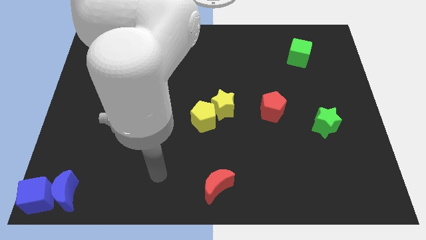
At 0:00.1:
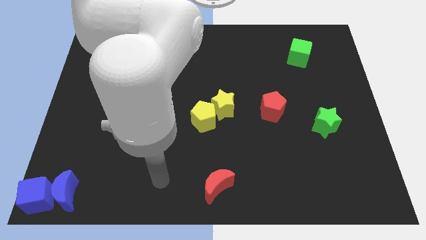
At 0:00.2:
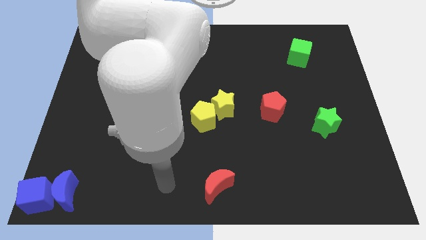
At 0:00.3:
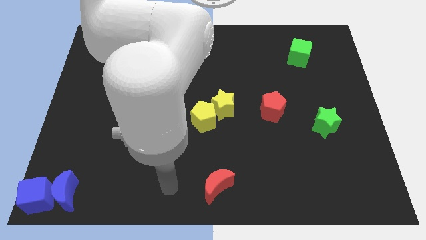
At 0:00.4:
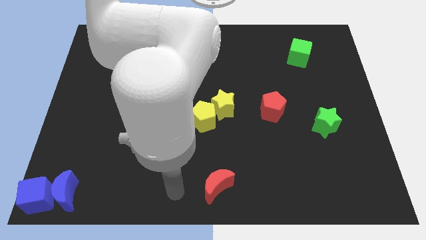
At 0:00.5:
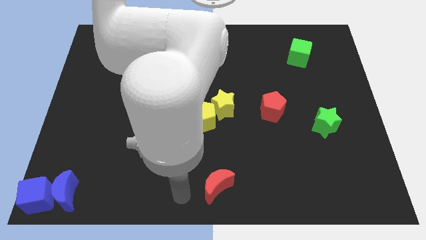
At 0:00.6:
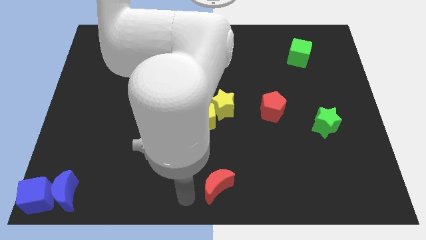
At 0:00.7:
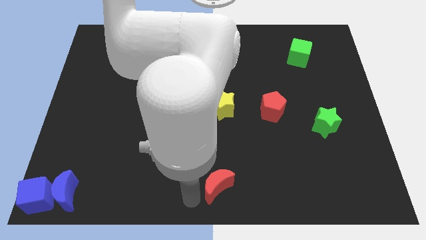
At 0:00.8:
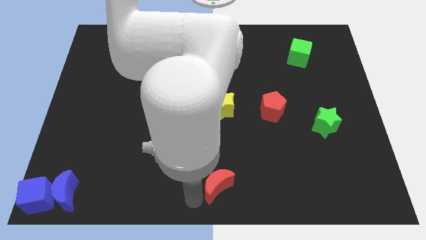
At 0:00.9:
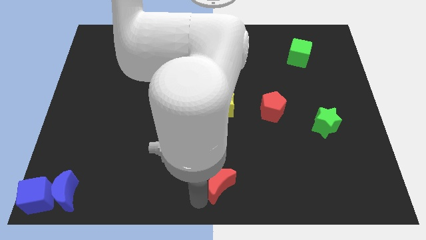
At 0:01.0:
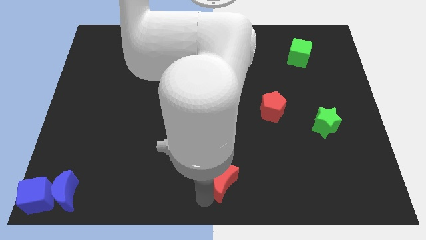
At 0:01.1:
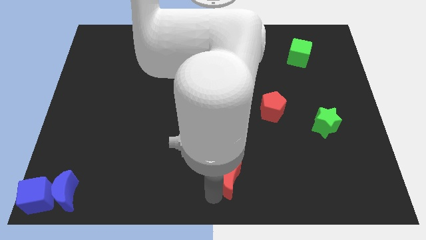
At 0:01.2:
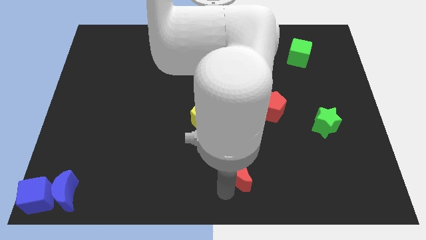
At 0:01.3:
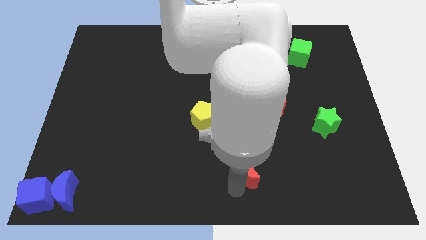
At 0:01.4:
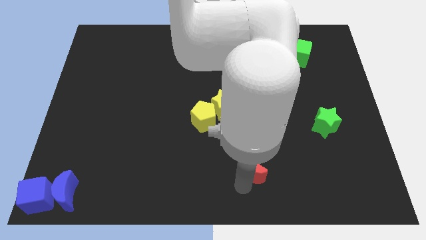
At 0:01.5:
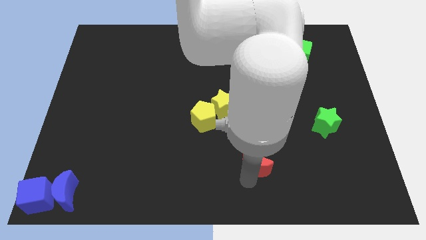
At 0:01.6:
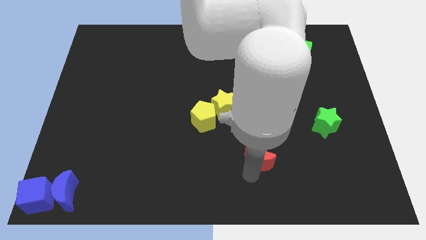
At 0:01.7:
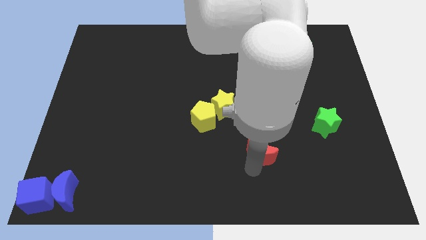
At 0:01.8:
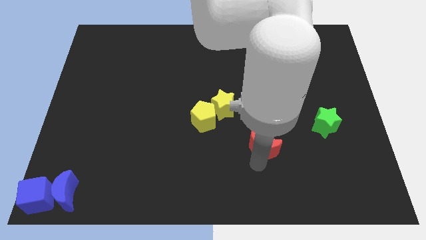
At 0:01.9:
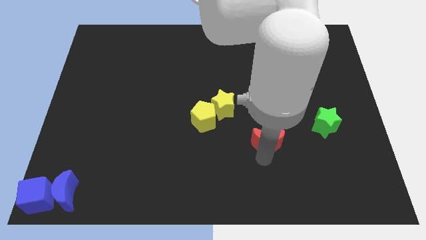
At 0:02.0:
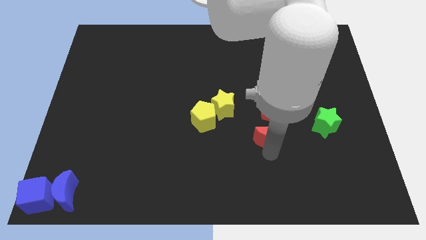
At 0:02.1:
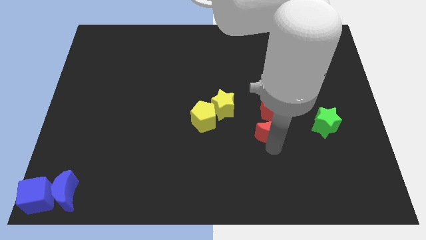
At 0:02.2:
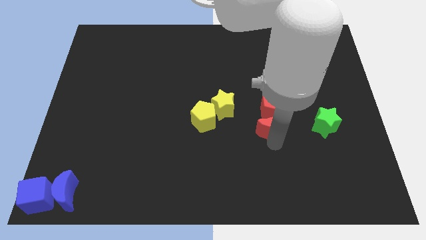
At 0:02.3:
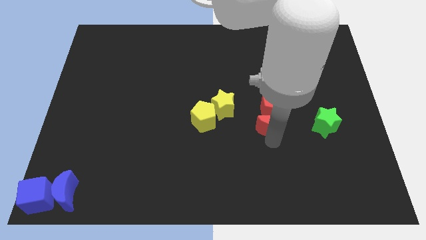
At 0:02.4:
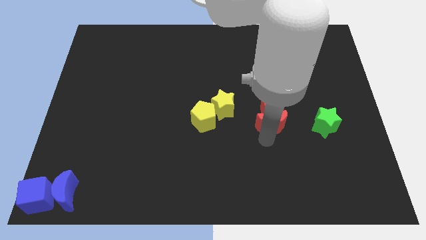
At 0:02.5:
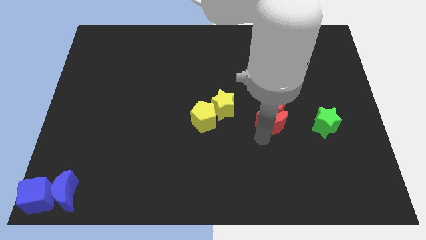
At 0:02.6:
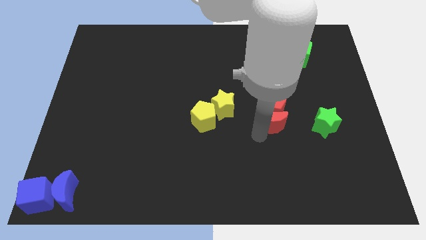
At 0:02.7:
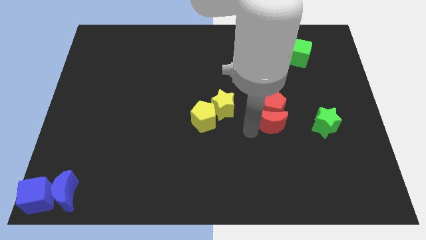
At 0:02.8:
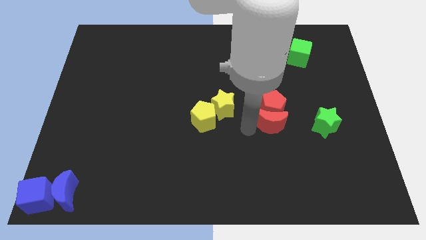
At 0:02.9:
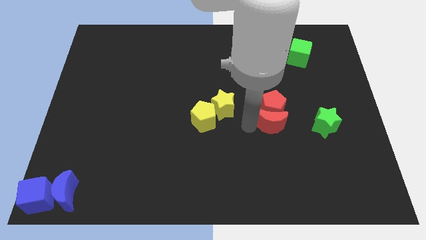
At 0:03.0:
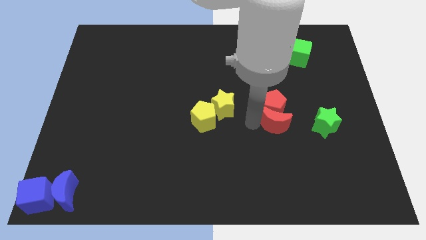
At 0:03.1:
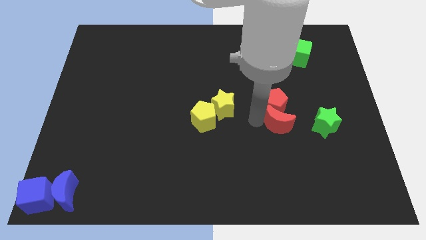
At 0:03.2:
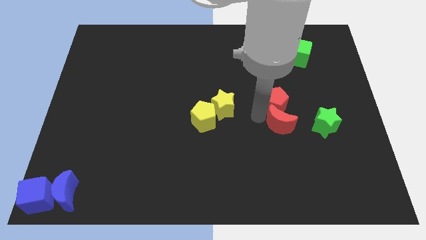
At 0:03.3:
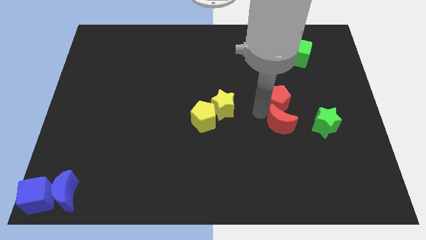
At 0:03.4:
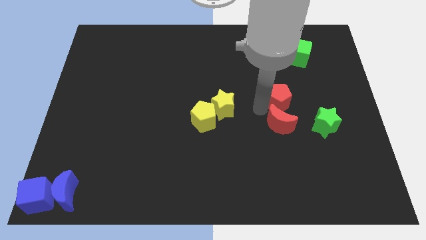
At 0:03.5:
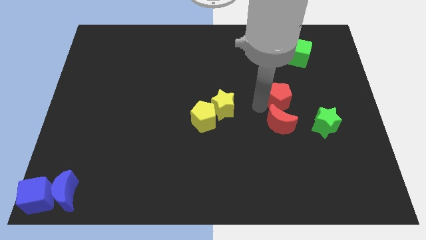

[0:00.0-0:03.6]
move red crescent into red pentagon

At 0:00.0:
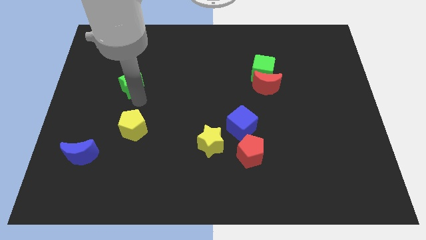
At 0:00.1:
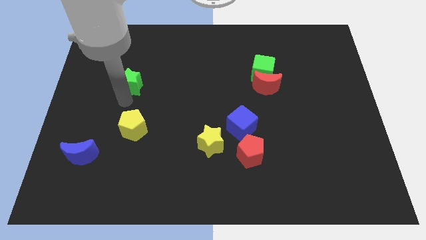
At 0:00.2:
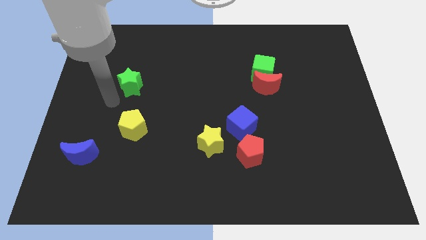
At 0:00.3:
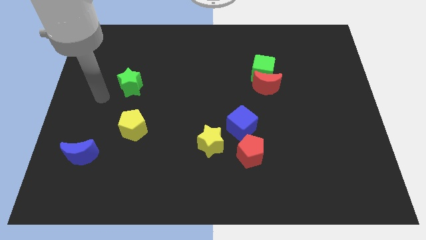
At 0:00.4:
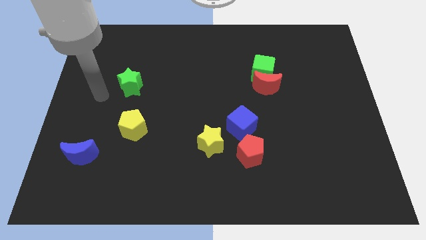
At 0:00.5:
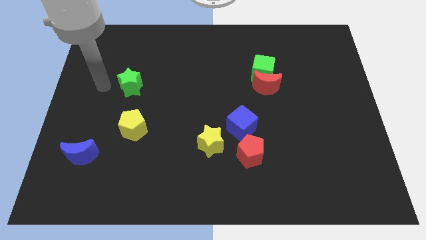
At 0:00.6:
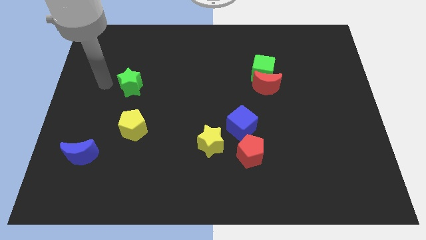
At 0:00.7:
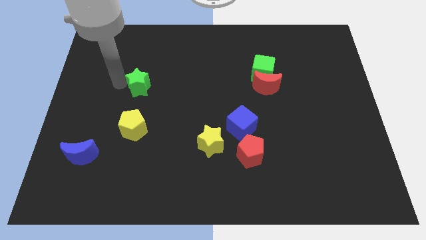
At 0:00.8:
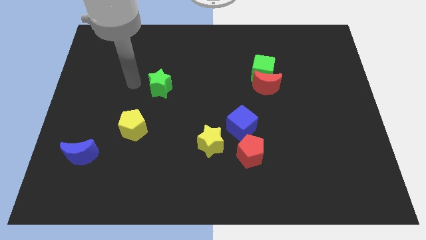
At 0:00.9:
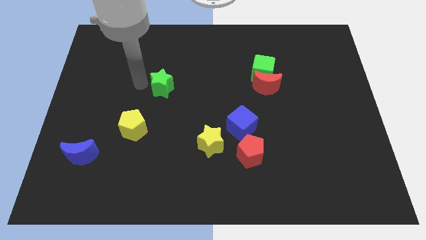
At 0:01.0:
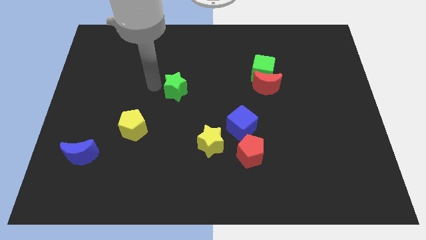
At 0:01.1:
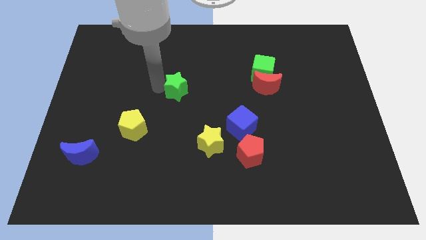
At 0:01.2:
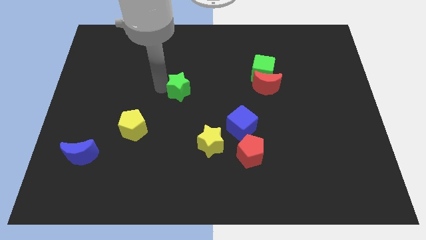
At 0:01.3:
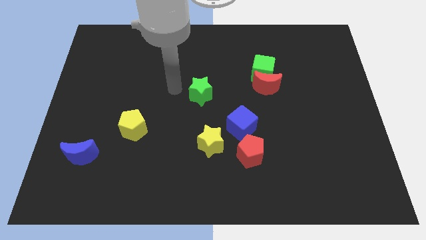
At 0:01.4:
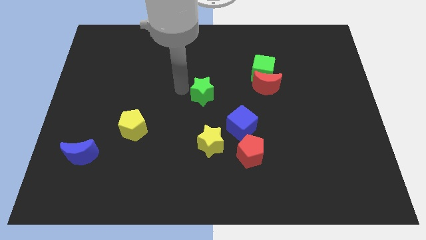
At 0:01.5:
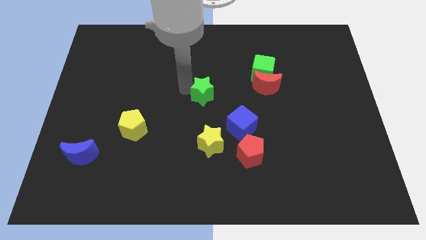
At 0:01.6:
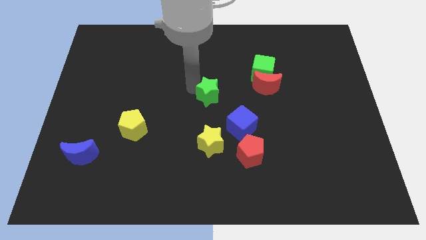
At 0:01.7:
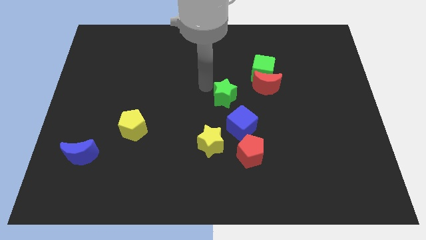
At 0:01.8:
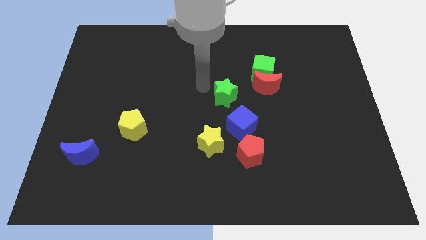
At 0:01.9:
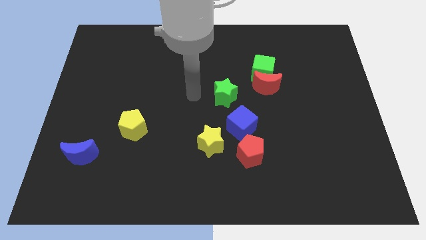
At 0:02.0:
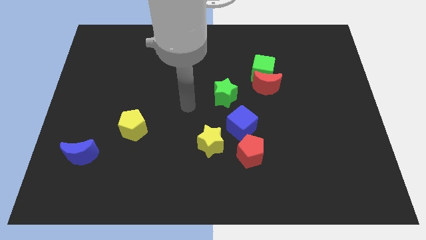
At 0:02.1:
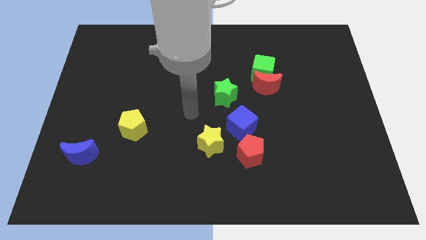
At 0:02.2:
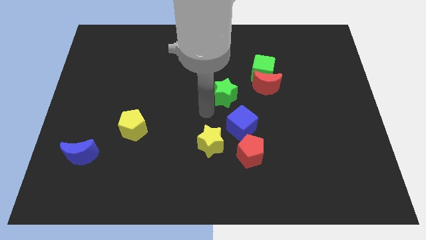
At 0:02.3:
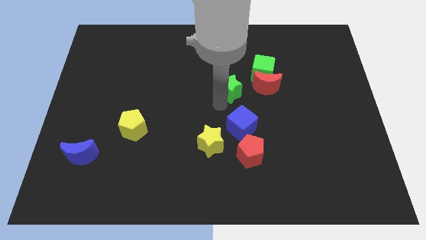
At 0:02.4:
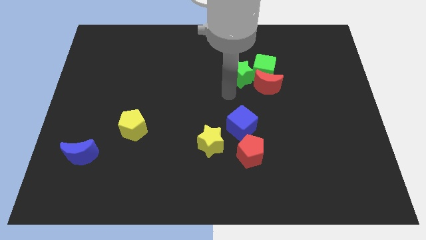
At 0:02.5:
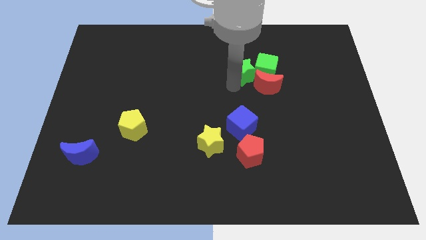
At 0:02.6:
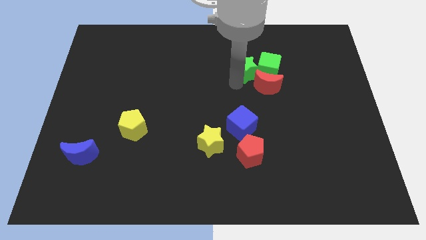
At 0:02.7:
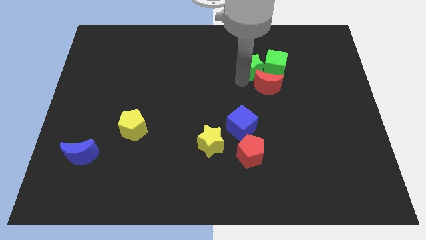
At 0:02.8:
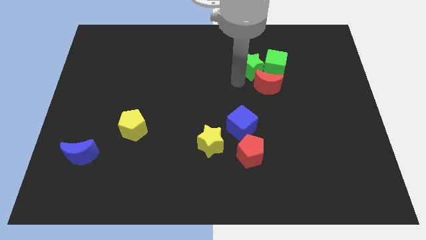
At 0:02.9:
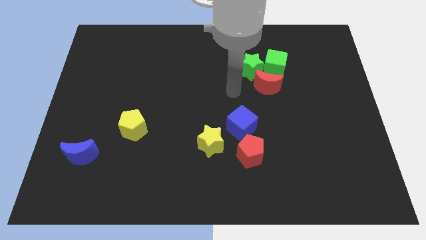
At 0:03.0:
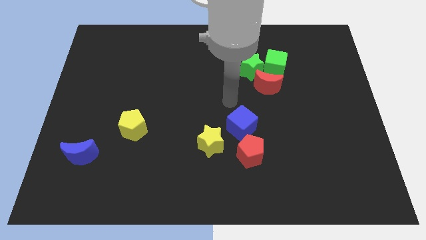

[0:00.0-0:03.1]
move the green star into the green cube

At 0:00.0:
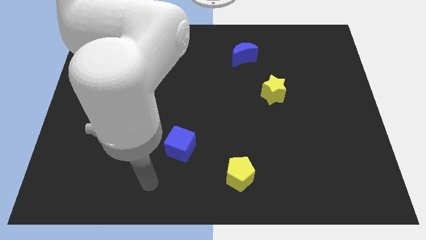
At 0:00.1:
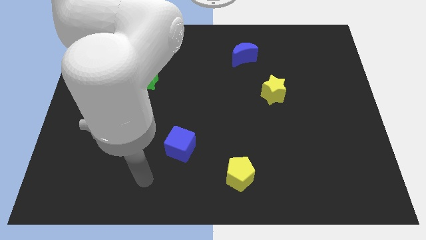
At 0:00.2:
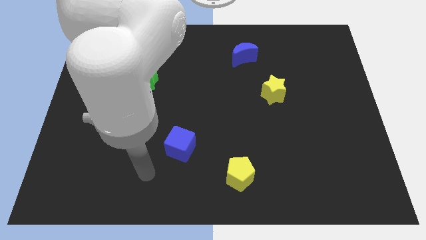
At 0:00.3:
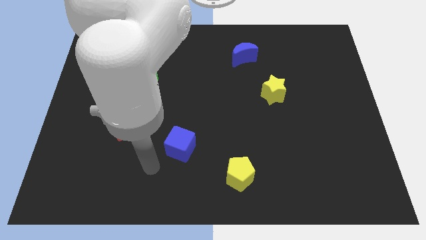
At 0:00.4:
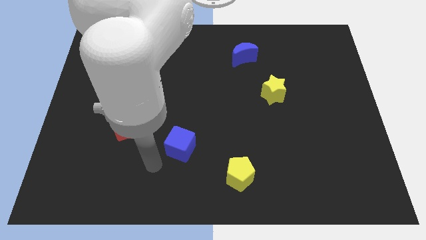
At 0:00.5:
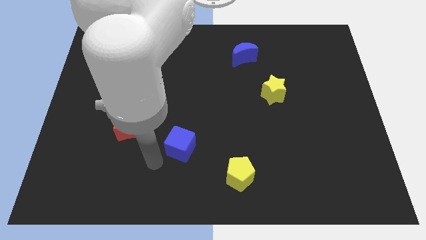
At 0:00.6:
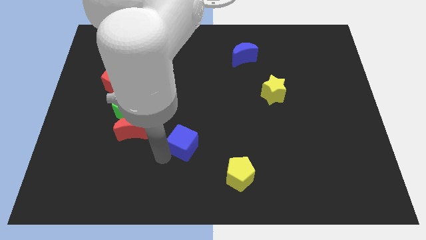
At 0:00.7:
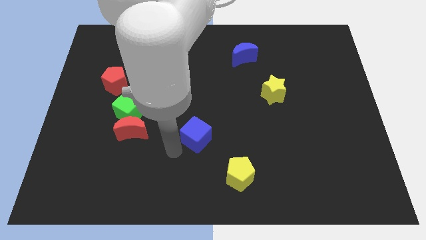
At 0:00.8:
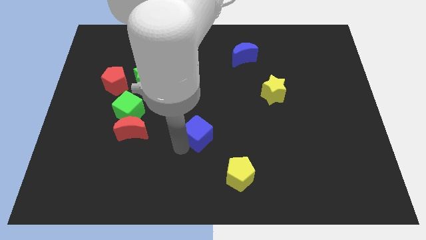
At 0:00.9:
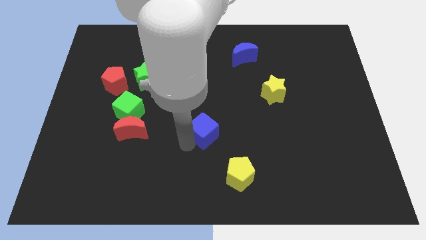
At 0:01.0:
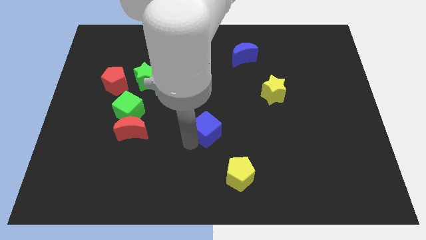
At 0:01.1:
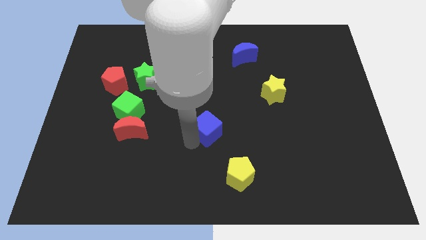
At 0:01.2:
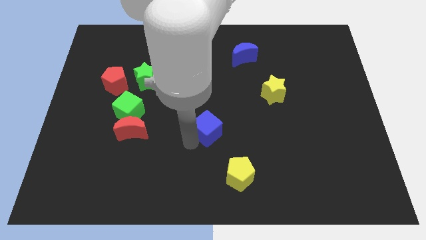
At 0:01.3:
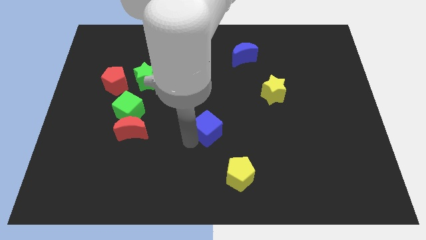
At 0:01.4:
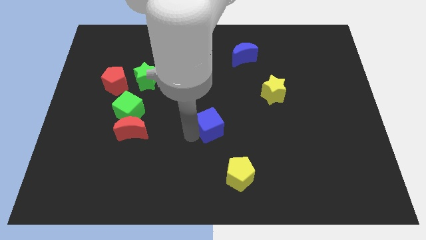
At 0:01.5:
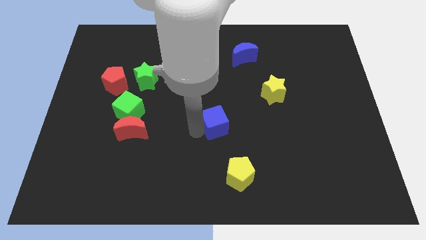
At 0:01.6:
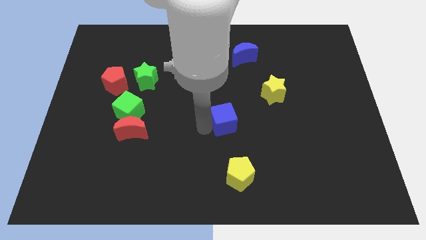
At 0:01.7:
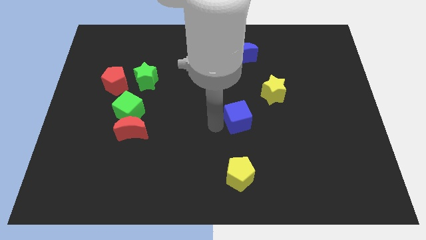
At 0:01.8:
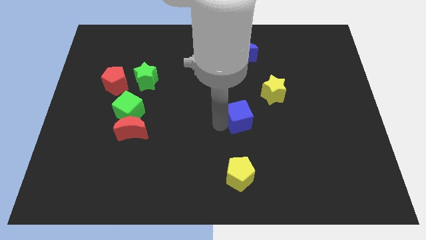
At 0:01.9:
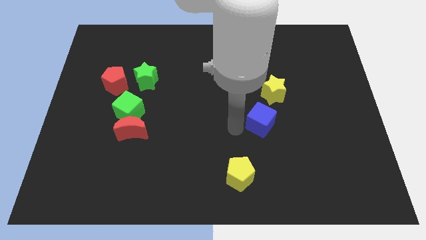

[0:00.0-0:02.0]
push the blue cube towards the top right of the board

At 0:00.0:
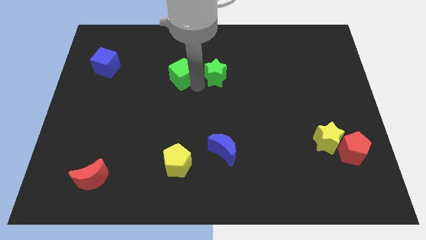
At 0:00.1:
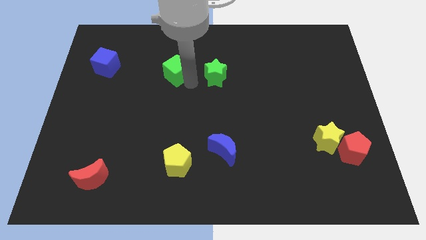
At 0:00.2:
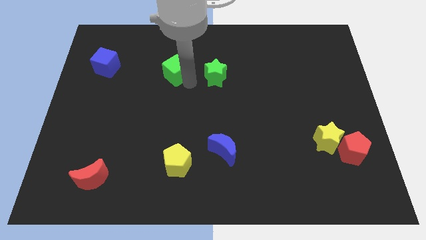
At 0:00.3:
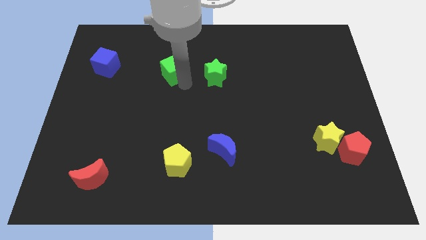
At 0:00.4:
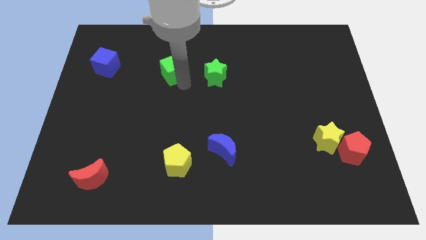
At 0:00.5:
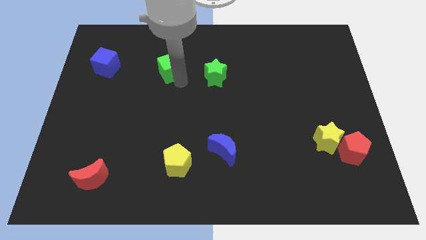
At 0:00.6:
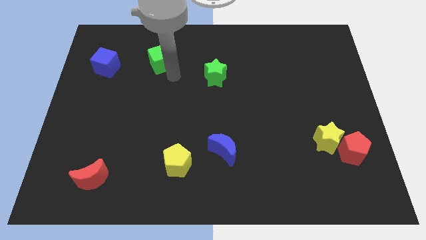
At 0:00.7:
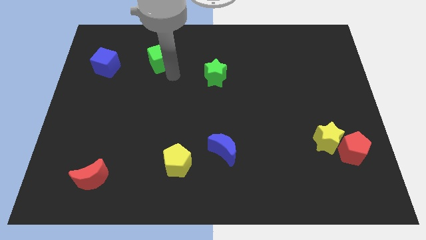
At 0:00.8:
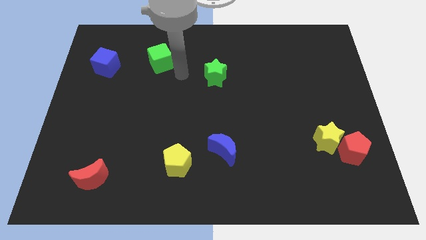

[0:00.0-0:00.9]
move the green cube away from the green star
